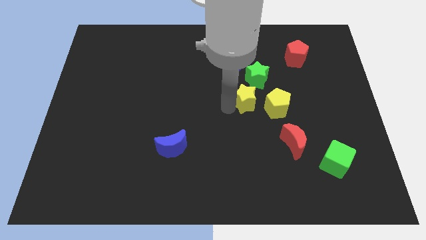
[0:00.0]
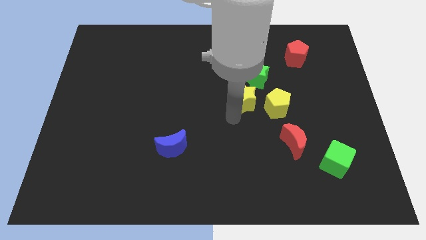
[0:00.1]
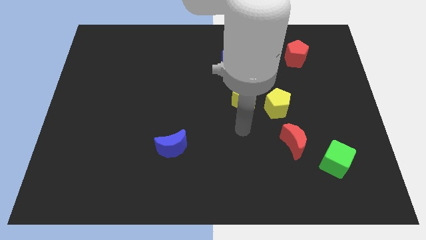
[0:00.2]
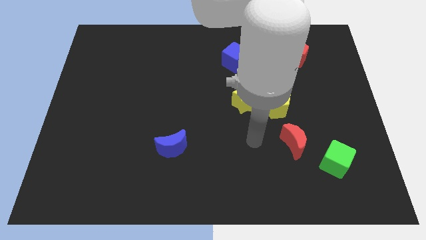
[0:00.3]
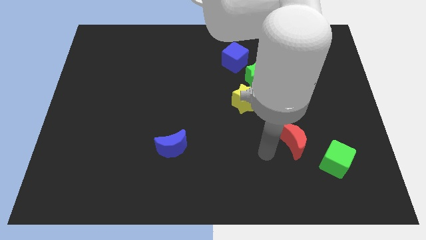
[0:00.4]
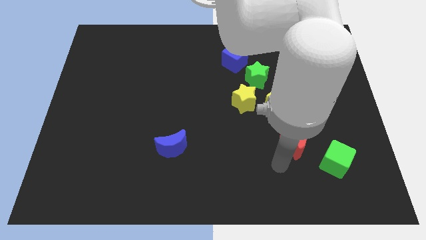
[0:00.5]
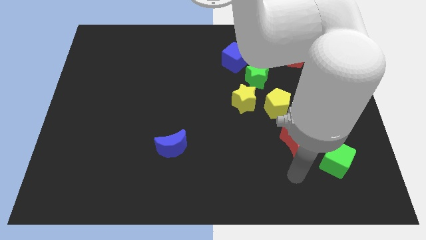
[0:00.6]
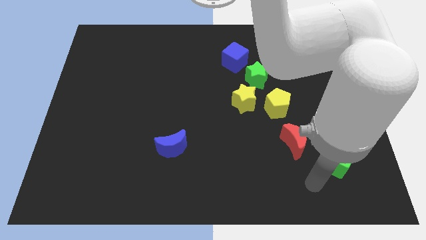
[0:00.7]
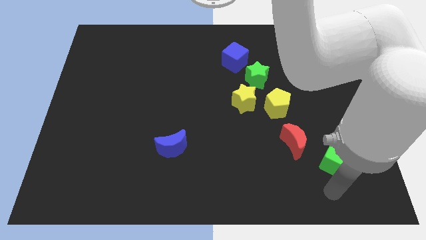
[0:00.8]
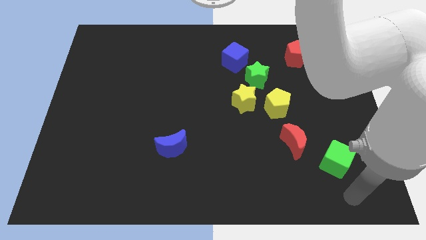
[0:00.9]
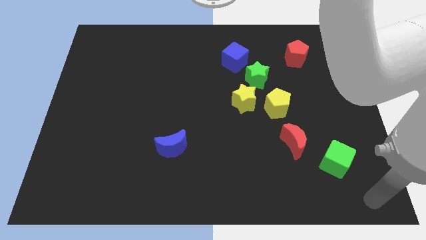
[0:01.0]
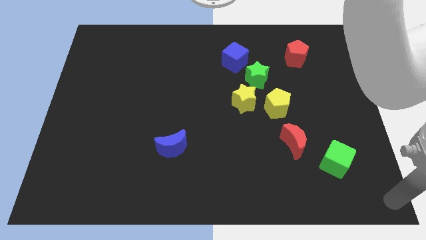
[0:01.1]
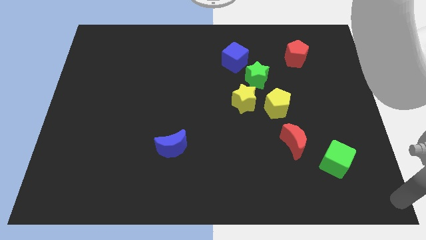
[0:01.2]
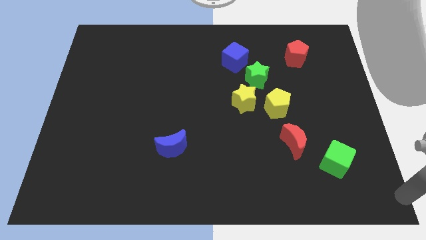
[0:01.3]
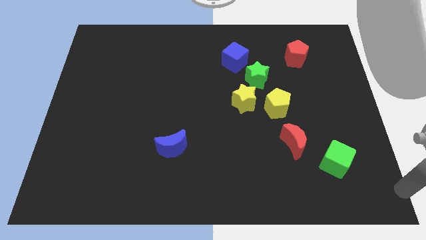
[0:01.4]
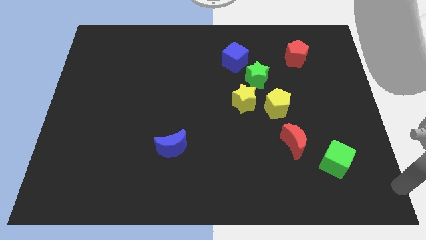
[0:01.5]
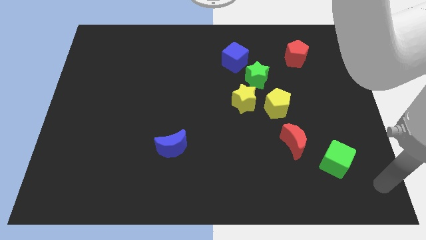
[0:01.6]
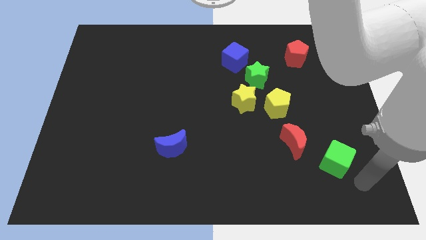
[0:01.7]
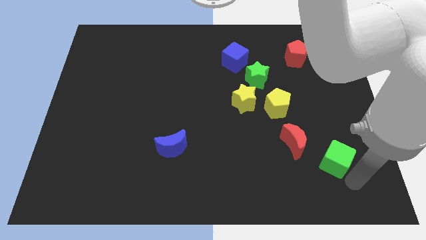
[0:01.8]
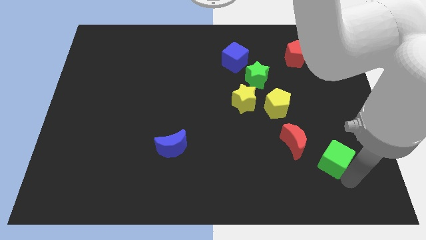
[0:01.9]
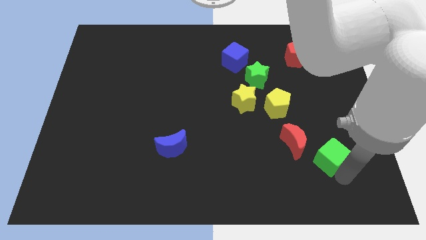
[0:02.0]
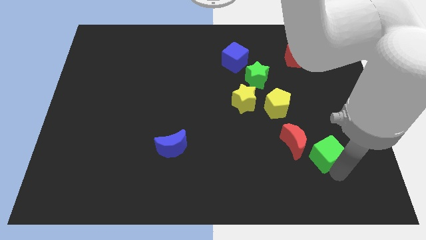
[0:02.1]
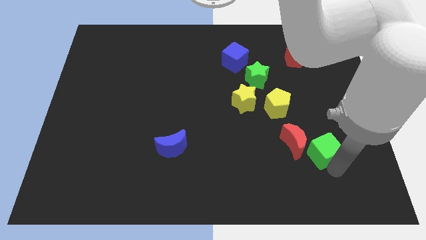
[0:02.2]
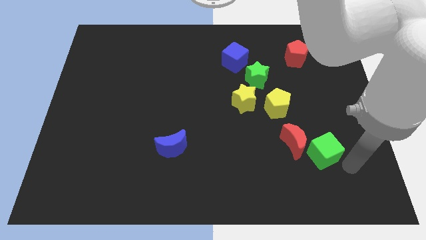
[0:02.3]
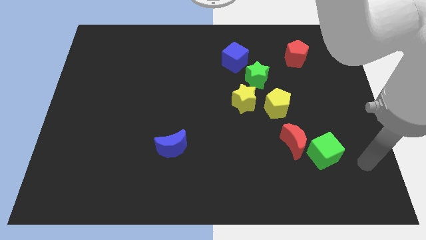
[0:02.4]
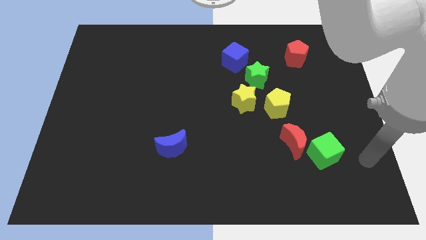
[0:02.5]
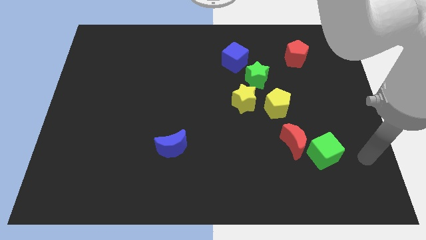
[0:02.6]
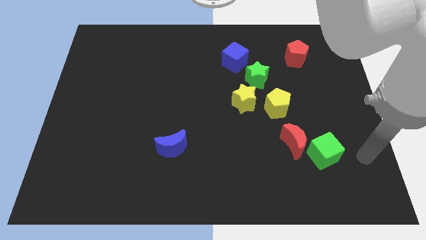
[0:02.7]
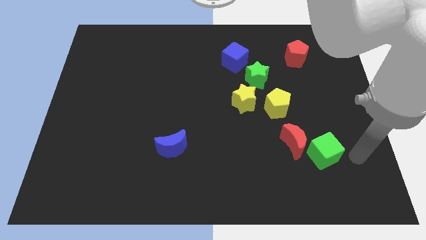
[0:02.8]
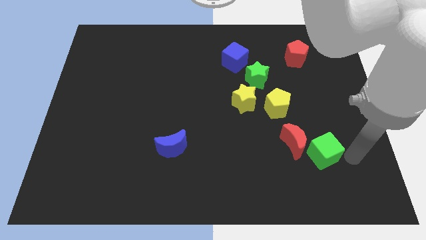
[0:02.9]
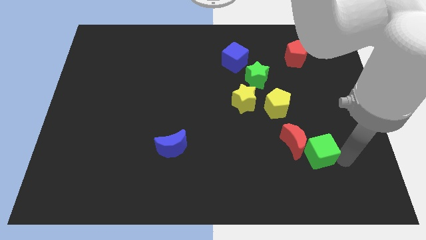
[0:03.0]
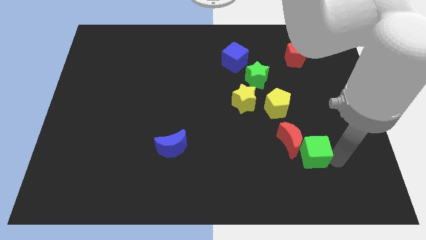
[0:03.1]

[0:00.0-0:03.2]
push the green cube towards the red moon

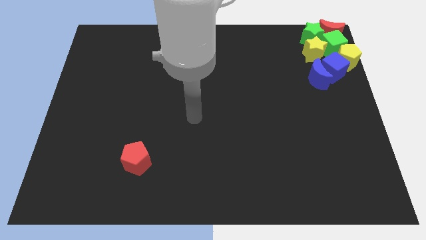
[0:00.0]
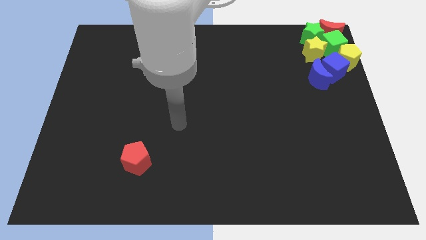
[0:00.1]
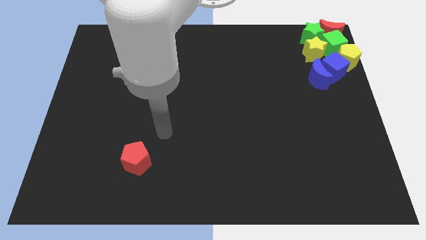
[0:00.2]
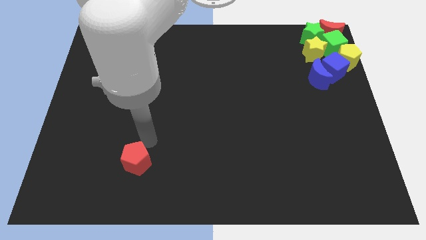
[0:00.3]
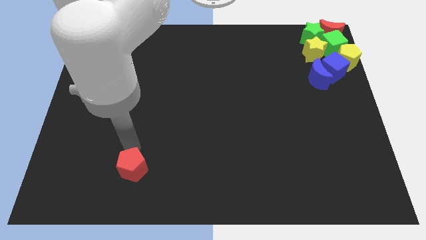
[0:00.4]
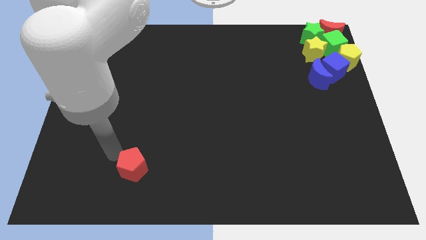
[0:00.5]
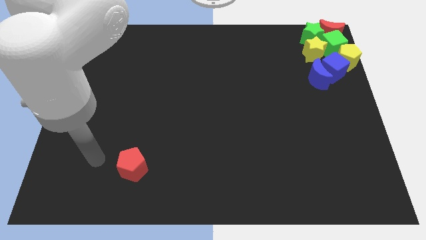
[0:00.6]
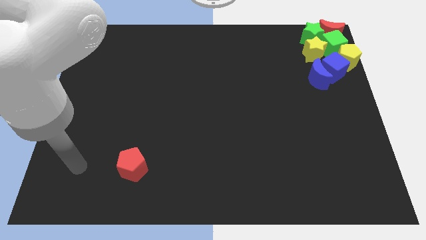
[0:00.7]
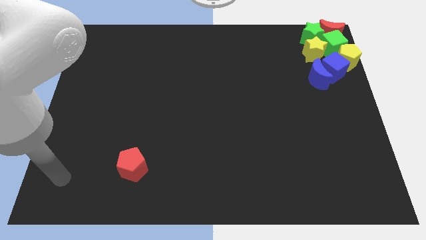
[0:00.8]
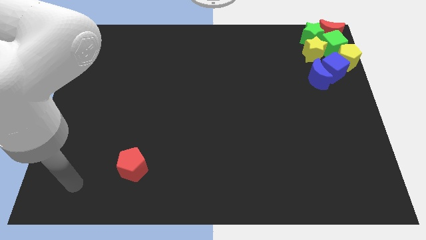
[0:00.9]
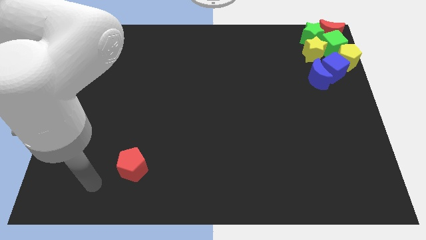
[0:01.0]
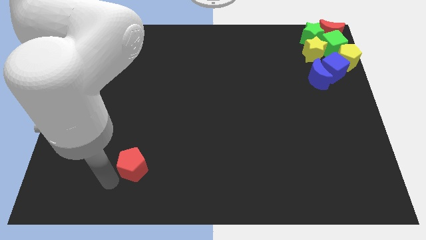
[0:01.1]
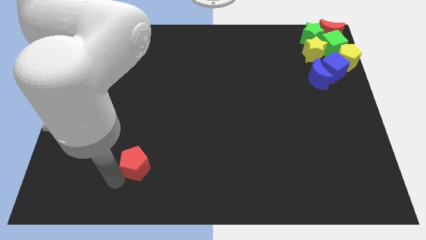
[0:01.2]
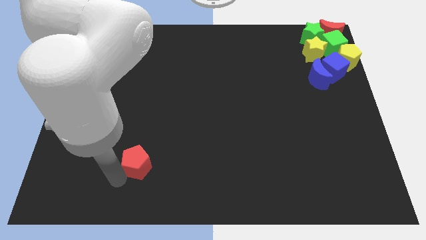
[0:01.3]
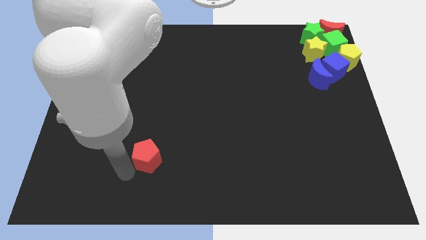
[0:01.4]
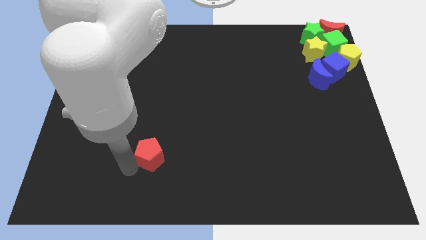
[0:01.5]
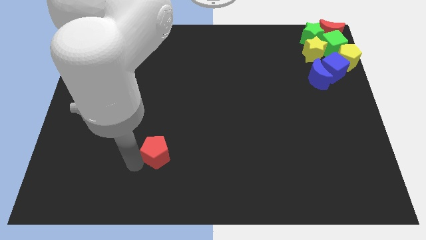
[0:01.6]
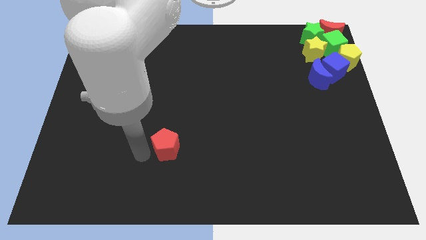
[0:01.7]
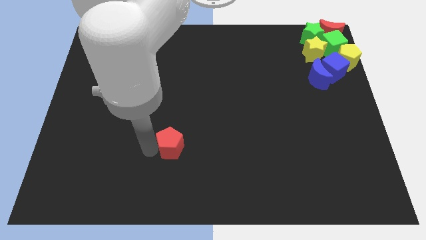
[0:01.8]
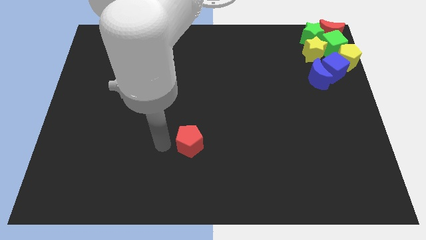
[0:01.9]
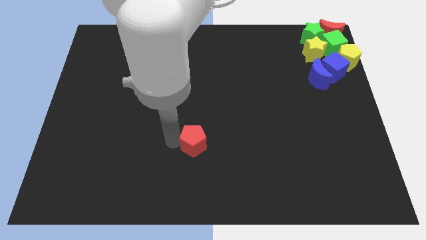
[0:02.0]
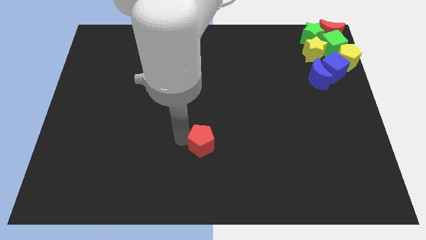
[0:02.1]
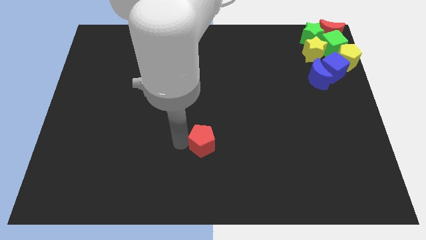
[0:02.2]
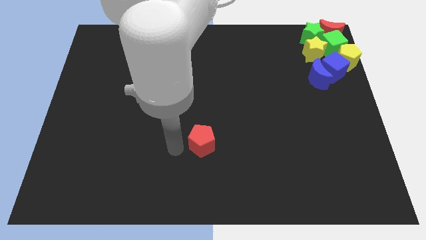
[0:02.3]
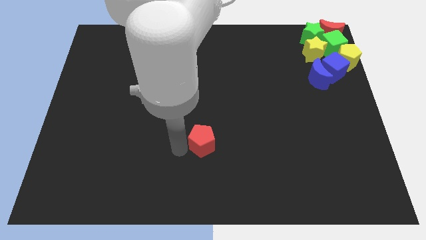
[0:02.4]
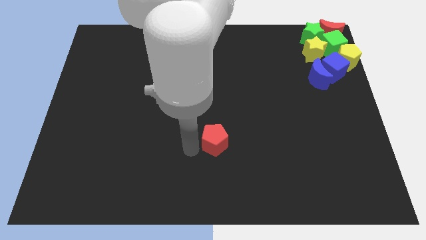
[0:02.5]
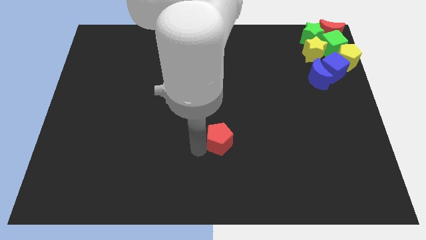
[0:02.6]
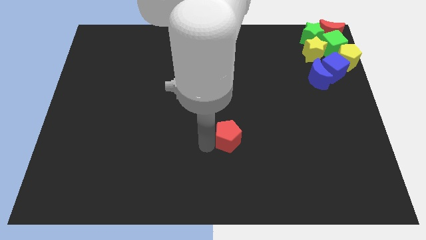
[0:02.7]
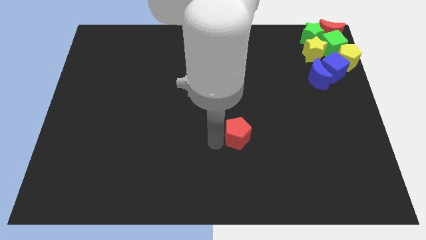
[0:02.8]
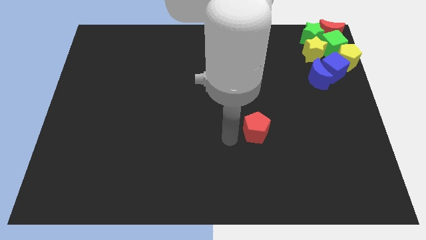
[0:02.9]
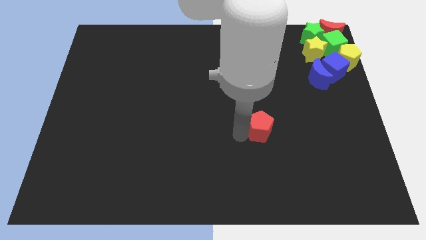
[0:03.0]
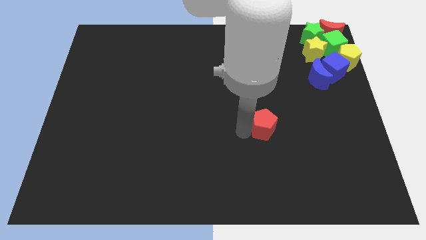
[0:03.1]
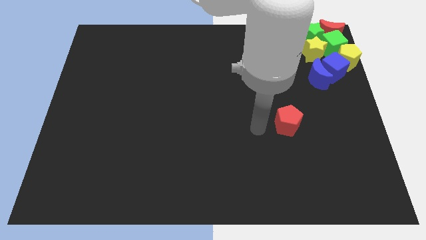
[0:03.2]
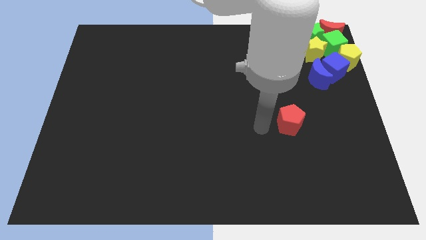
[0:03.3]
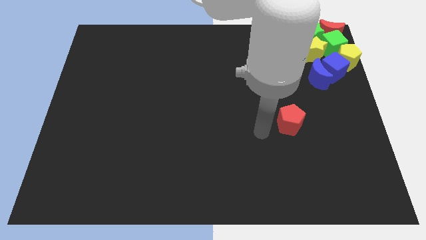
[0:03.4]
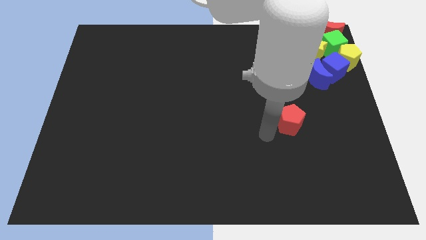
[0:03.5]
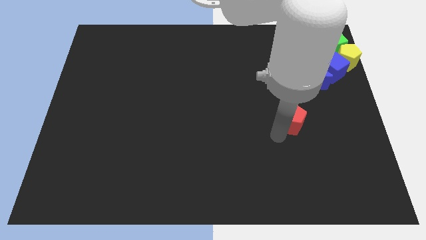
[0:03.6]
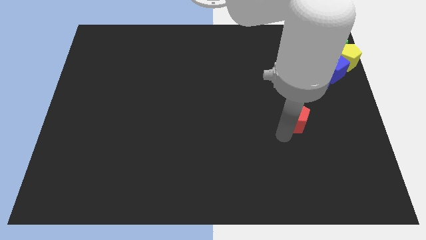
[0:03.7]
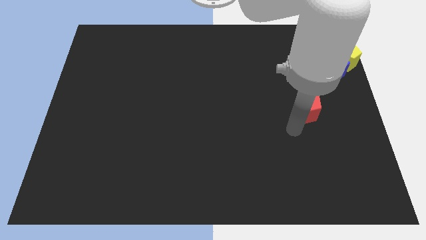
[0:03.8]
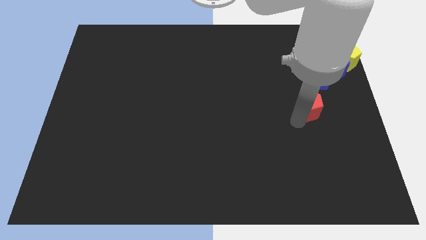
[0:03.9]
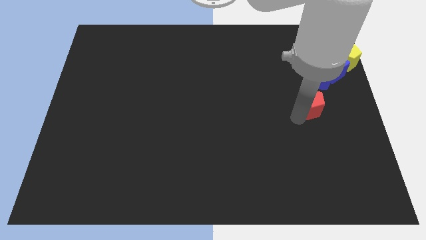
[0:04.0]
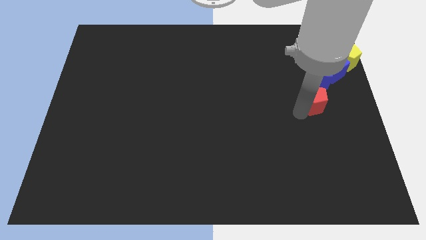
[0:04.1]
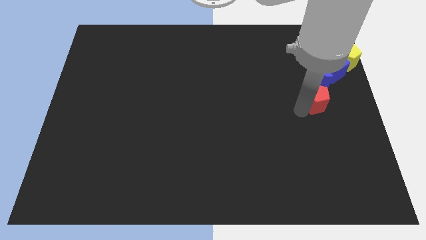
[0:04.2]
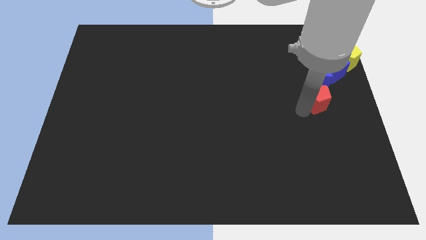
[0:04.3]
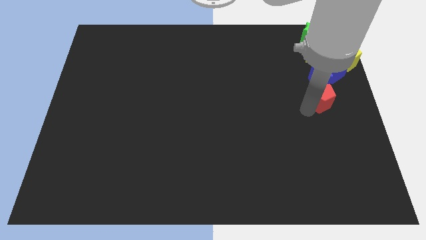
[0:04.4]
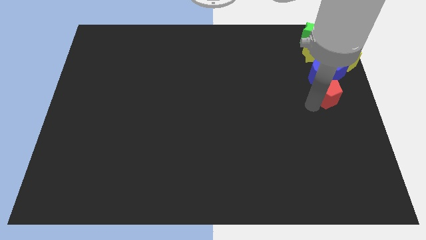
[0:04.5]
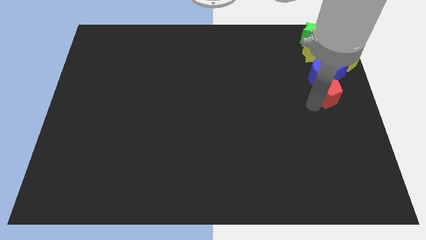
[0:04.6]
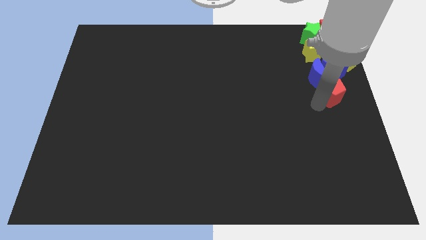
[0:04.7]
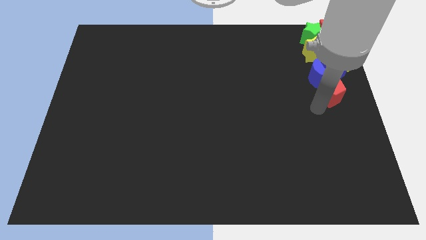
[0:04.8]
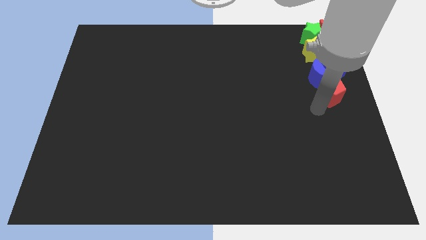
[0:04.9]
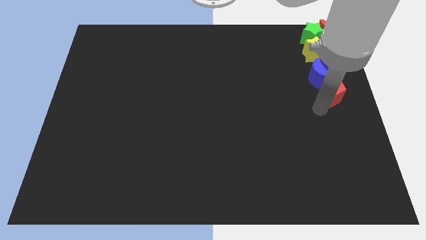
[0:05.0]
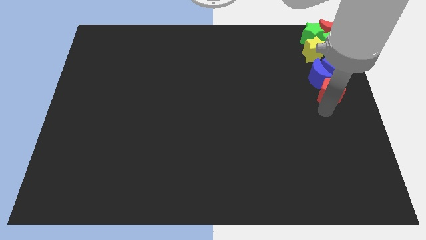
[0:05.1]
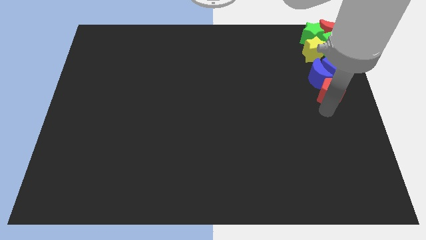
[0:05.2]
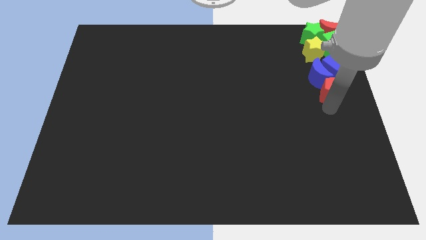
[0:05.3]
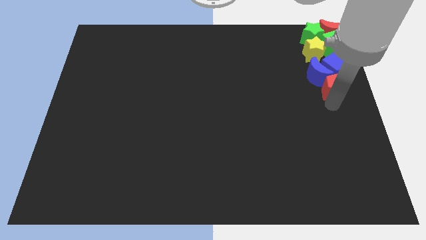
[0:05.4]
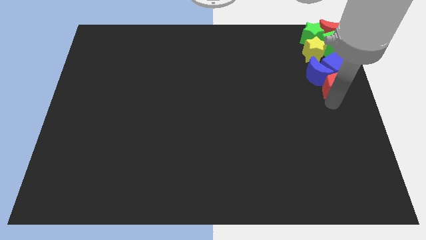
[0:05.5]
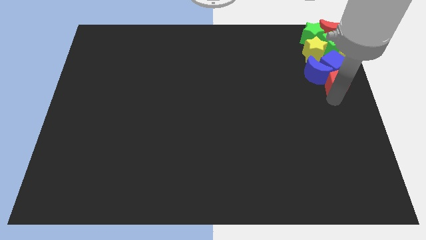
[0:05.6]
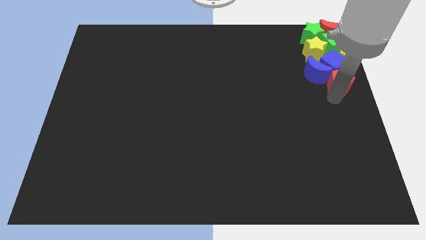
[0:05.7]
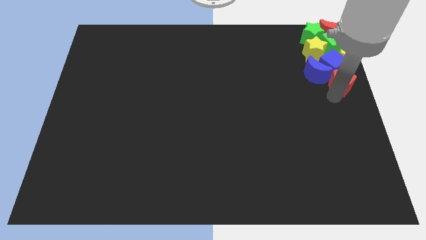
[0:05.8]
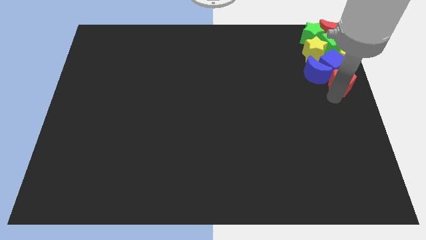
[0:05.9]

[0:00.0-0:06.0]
push the red pentagon into the group of blocks
